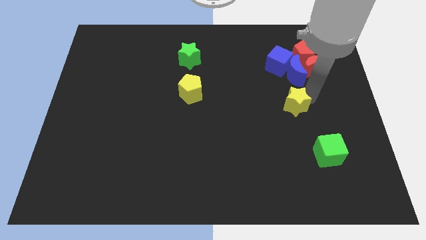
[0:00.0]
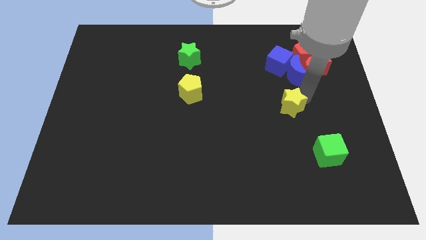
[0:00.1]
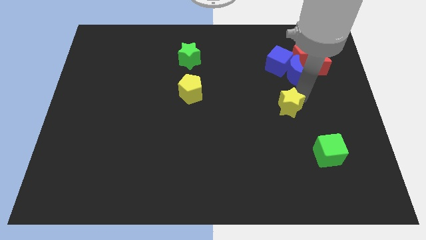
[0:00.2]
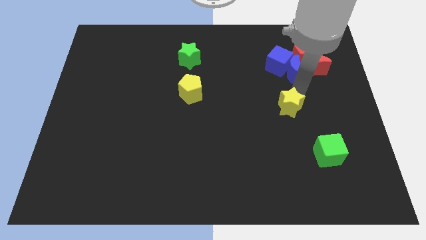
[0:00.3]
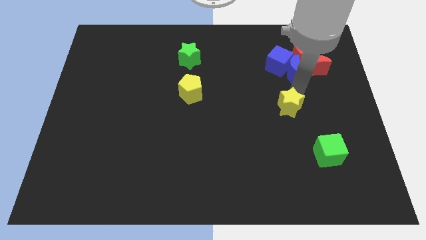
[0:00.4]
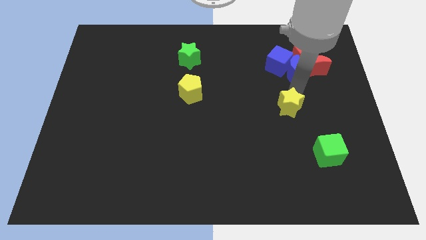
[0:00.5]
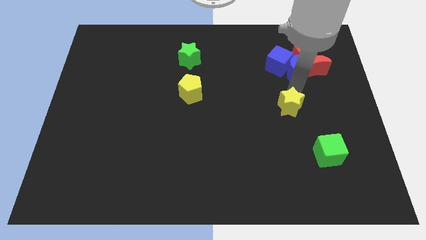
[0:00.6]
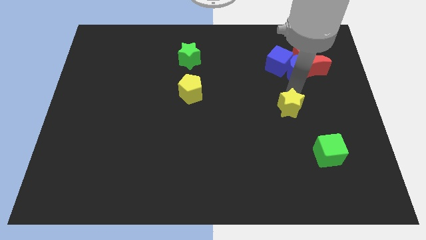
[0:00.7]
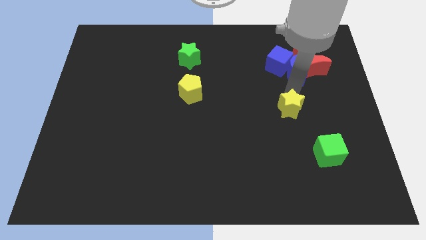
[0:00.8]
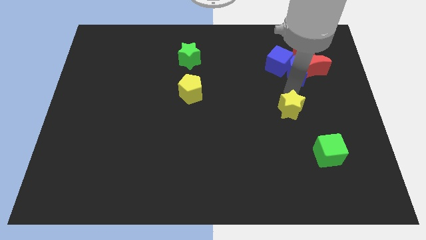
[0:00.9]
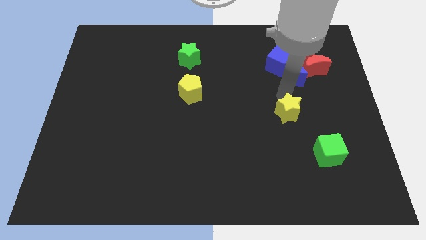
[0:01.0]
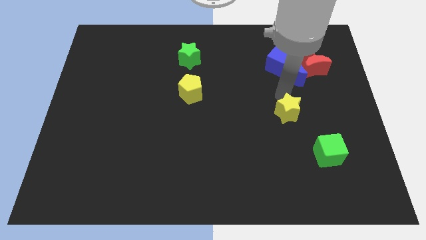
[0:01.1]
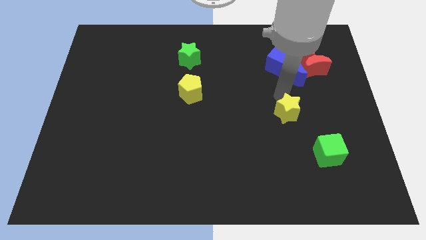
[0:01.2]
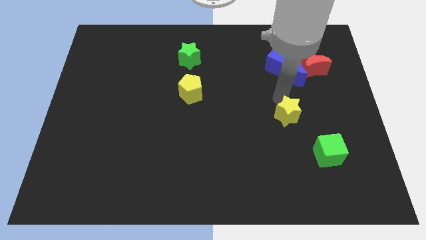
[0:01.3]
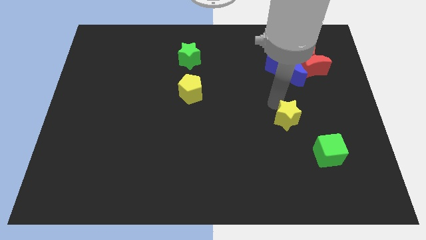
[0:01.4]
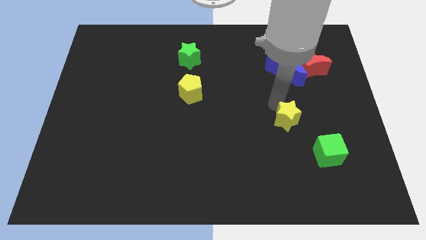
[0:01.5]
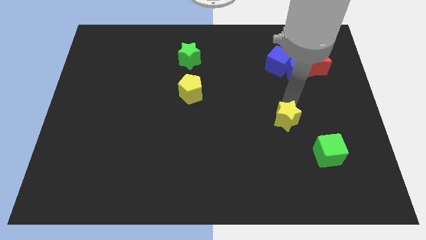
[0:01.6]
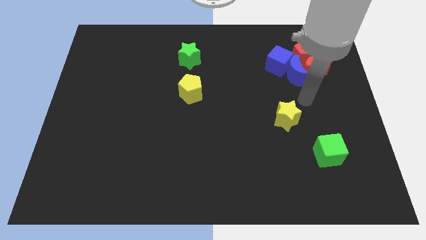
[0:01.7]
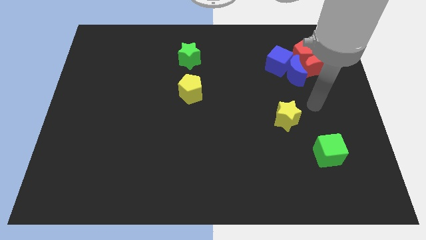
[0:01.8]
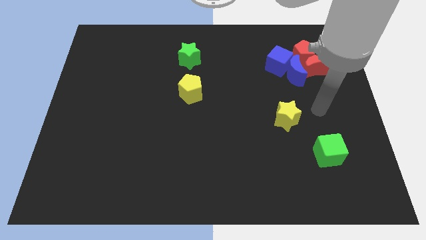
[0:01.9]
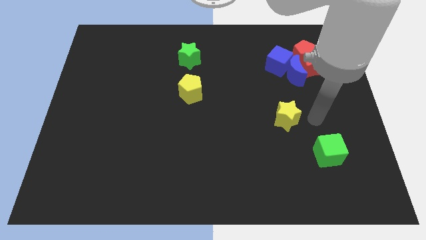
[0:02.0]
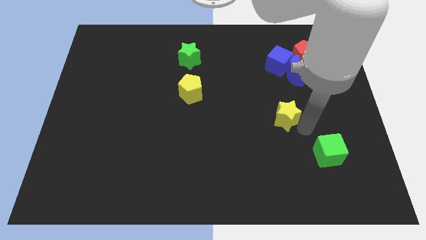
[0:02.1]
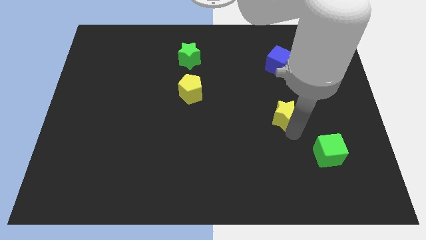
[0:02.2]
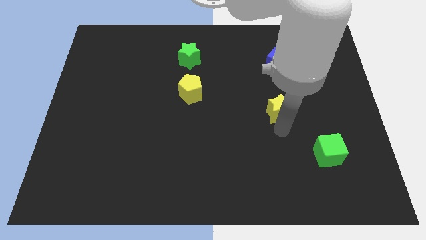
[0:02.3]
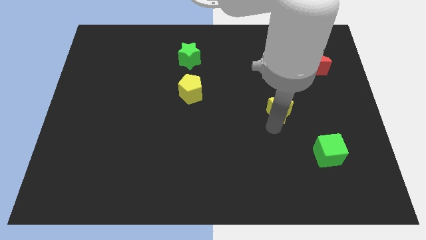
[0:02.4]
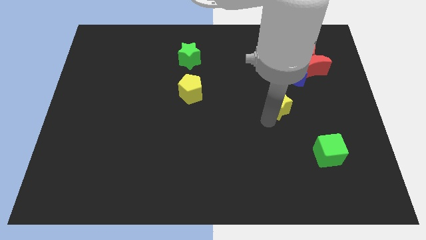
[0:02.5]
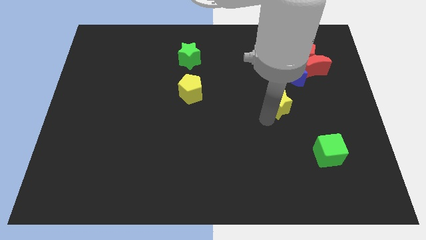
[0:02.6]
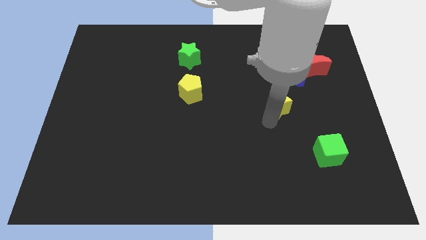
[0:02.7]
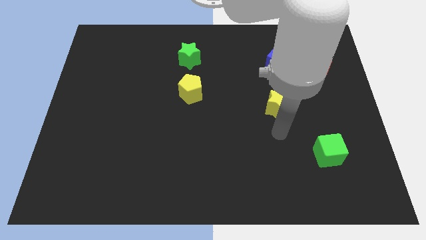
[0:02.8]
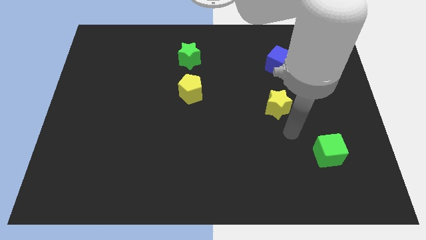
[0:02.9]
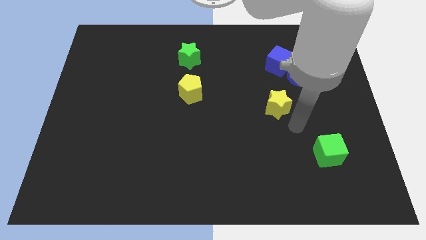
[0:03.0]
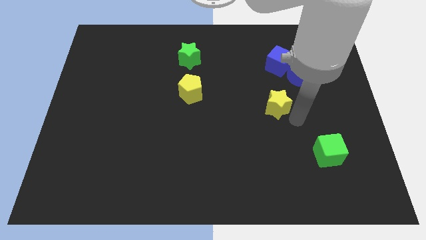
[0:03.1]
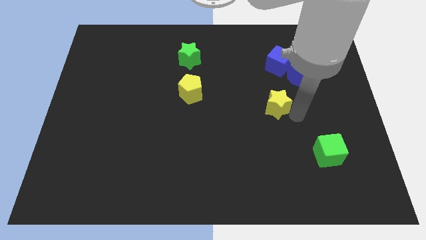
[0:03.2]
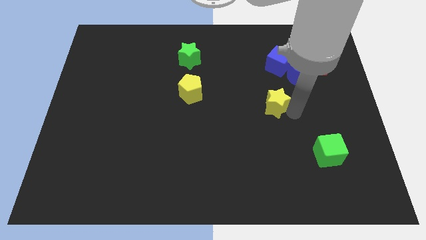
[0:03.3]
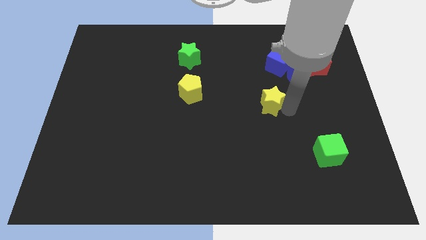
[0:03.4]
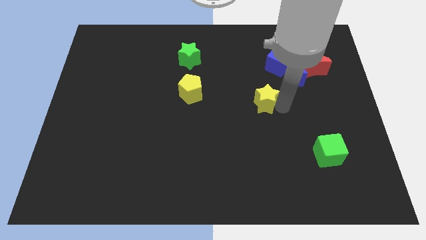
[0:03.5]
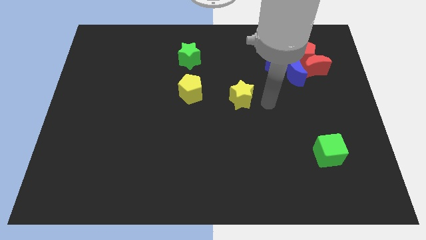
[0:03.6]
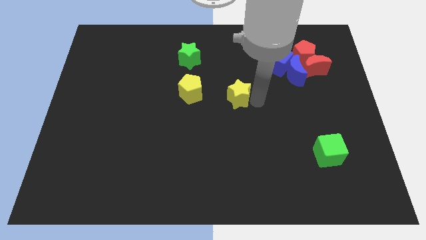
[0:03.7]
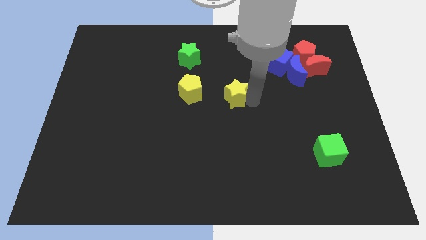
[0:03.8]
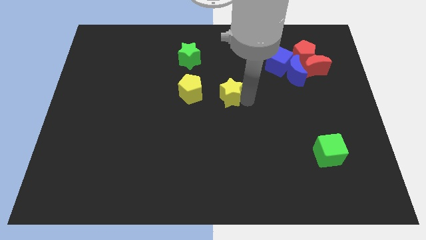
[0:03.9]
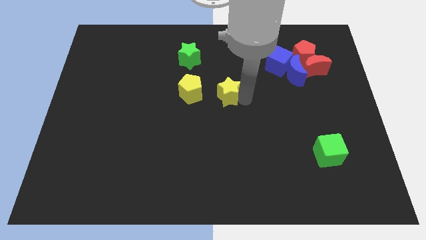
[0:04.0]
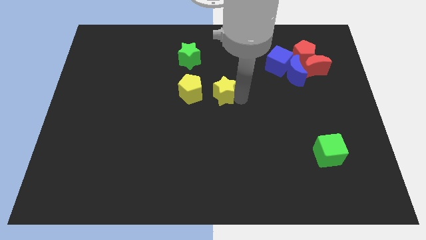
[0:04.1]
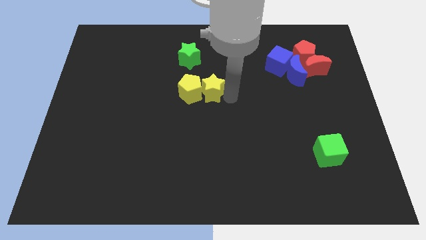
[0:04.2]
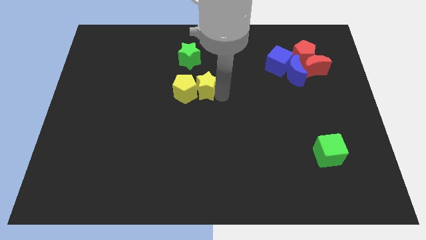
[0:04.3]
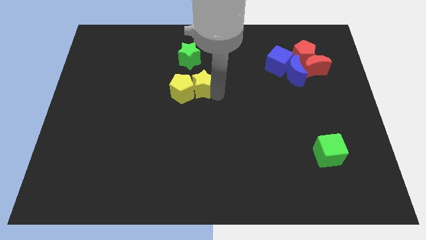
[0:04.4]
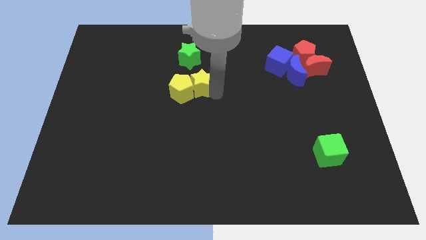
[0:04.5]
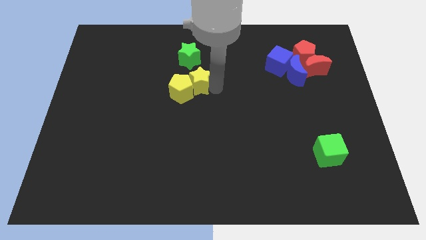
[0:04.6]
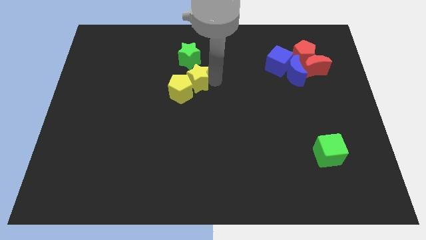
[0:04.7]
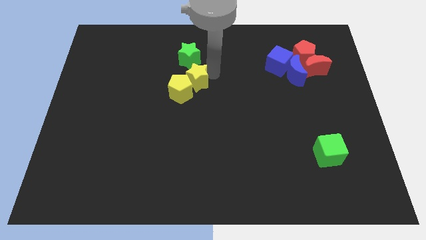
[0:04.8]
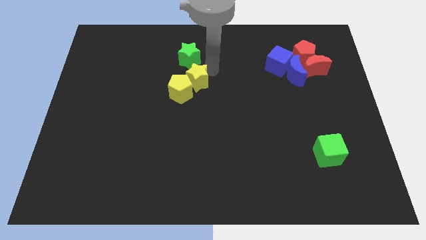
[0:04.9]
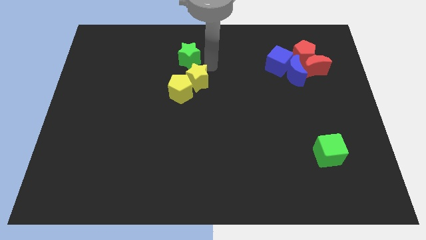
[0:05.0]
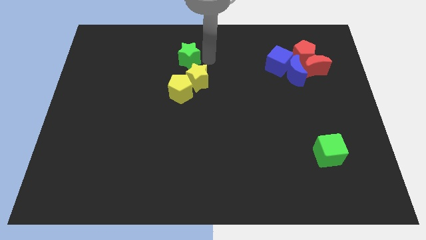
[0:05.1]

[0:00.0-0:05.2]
push the yellow star into the yellow pentagon

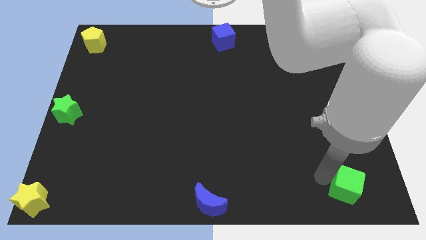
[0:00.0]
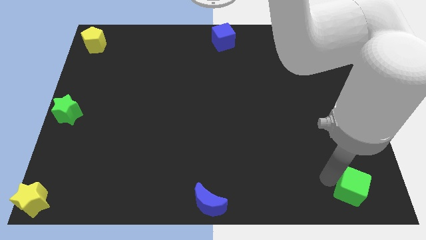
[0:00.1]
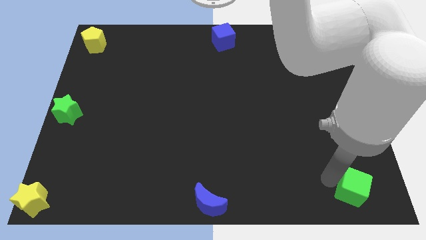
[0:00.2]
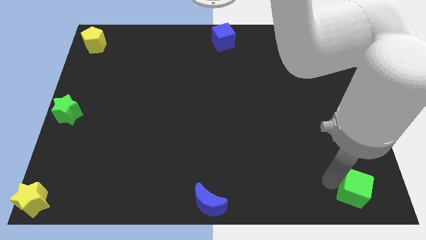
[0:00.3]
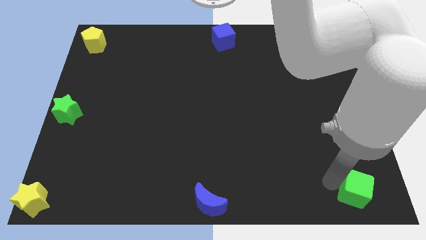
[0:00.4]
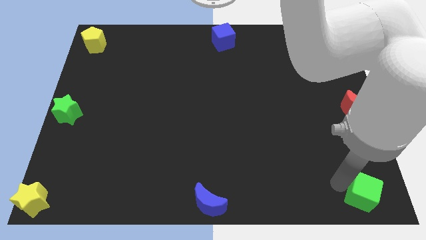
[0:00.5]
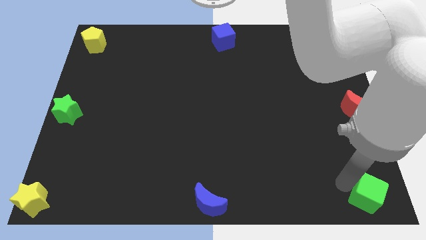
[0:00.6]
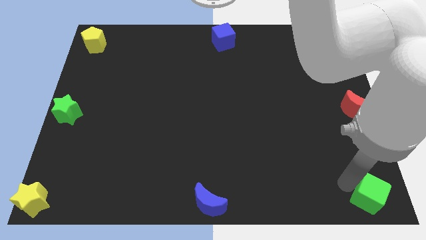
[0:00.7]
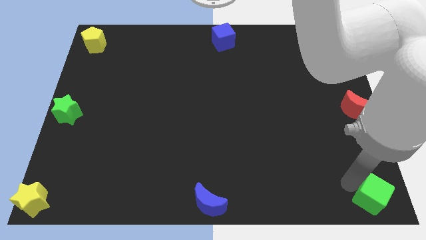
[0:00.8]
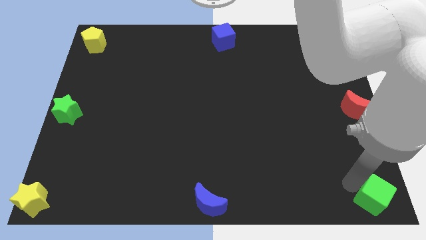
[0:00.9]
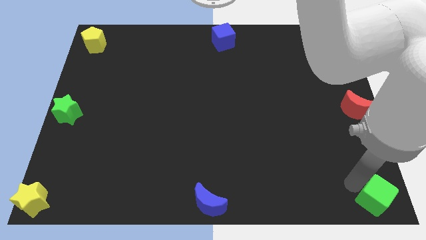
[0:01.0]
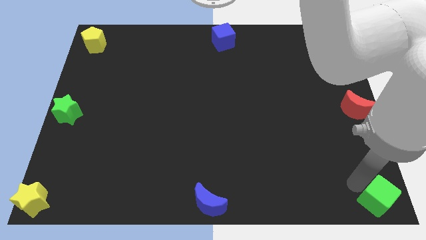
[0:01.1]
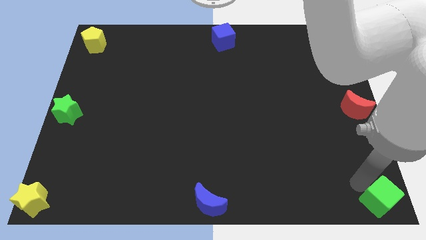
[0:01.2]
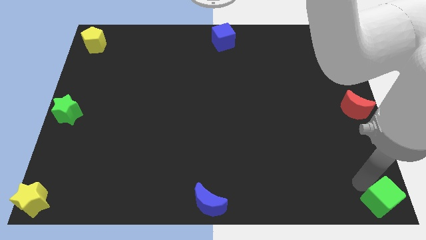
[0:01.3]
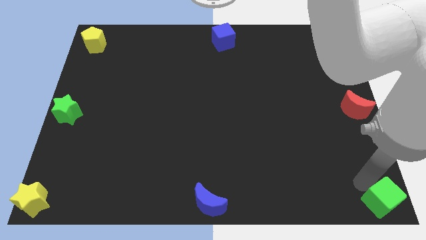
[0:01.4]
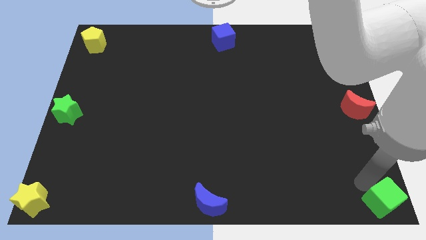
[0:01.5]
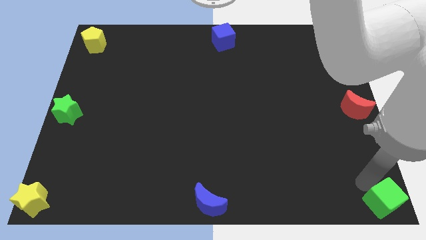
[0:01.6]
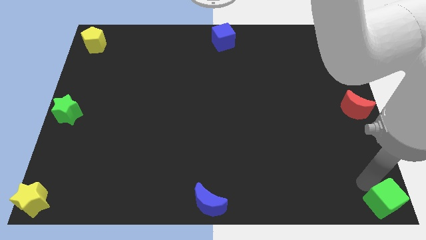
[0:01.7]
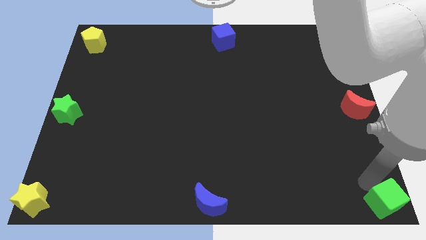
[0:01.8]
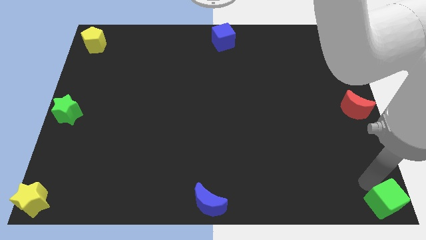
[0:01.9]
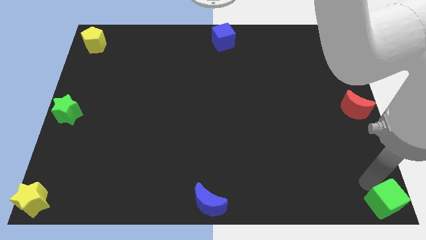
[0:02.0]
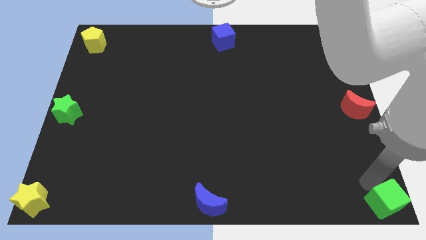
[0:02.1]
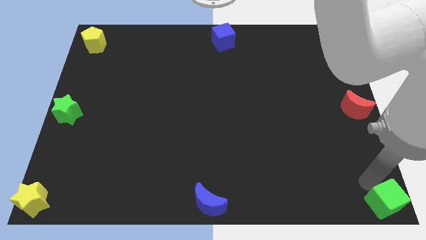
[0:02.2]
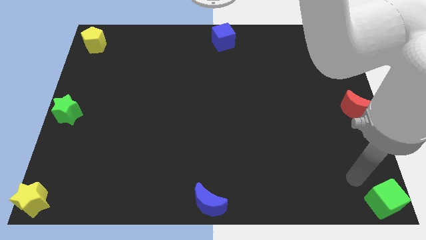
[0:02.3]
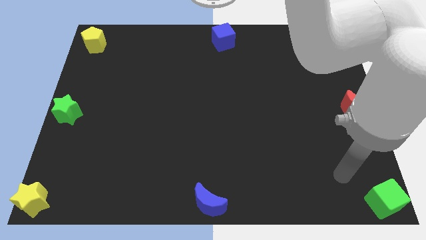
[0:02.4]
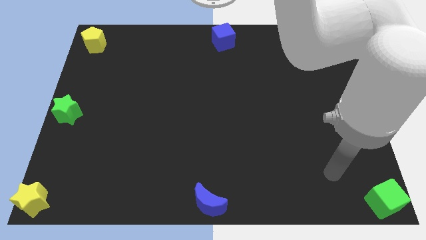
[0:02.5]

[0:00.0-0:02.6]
move the green cube towards the bottom left corner of the board

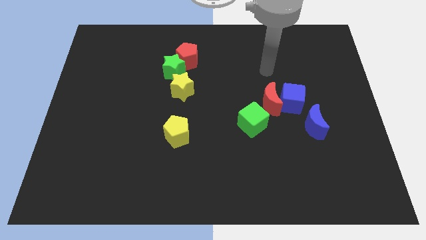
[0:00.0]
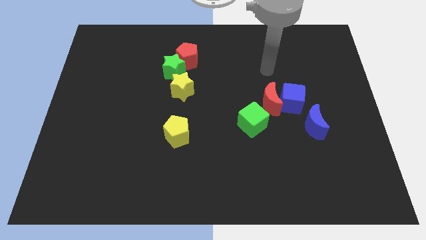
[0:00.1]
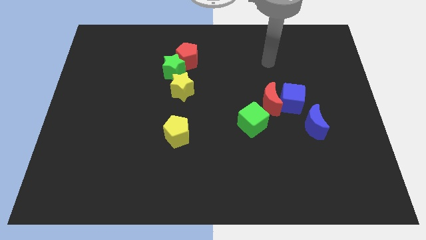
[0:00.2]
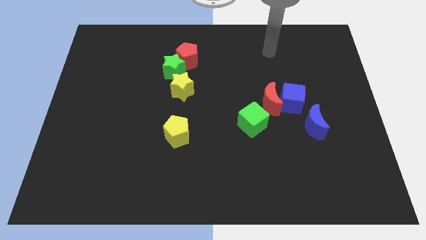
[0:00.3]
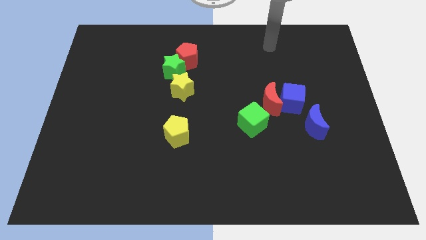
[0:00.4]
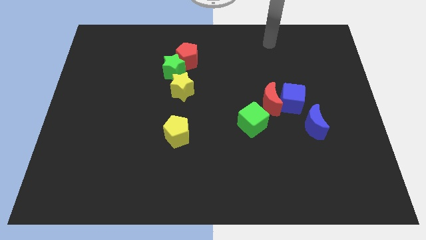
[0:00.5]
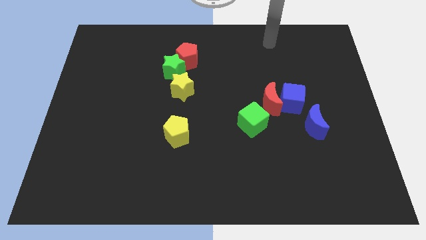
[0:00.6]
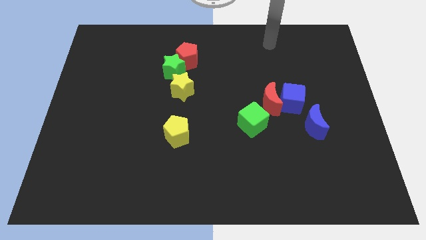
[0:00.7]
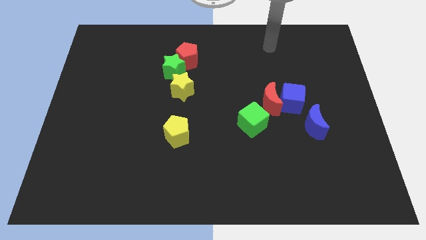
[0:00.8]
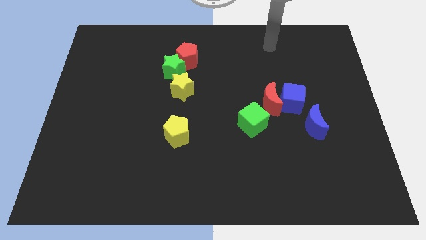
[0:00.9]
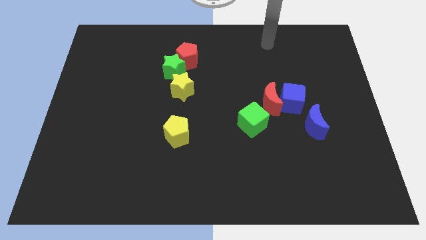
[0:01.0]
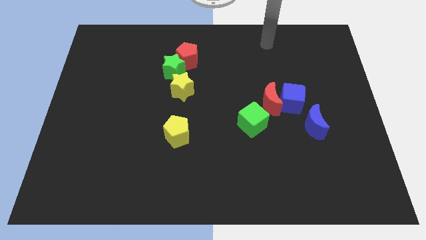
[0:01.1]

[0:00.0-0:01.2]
move the arm to the top
